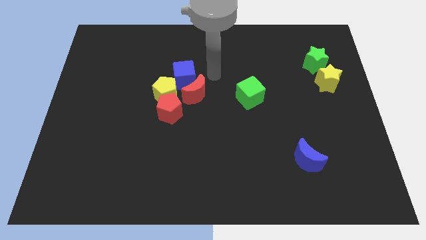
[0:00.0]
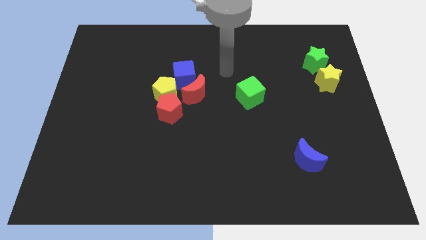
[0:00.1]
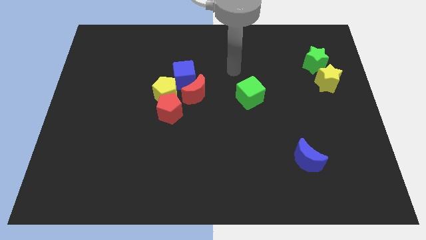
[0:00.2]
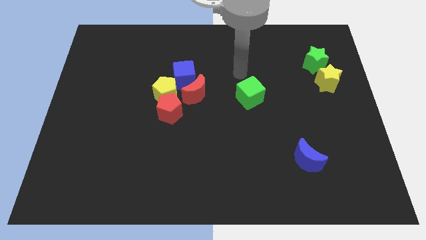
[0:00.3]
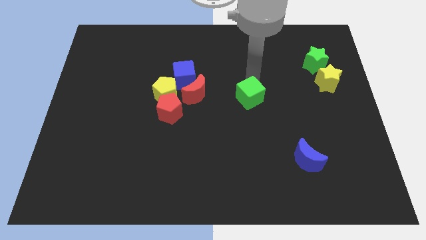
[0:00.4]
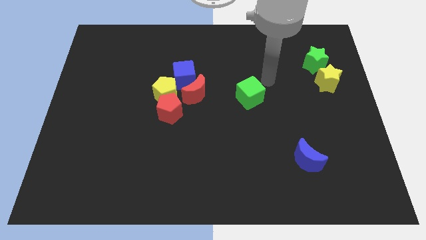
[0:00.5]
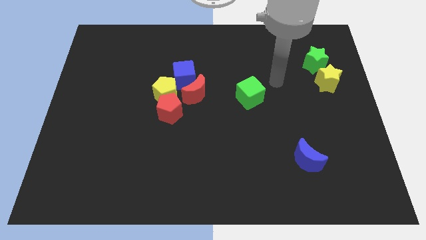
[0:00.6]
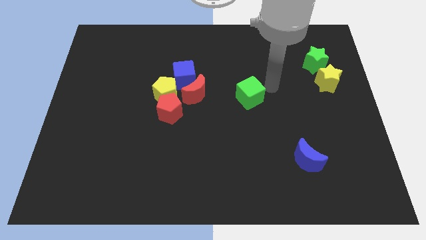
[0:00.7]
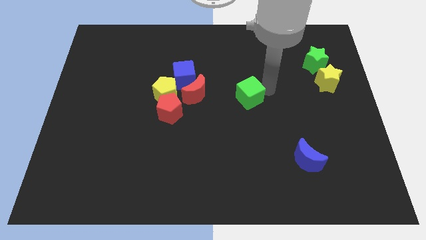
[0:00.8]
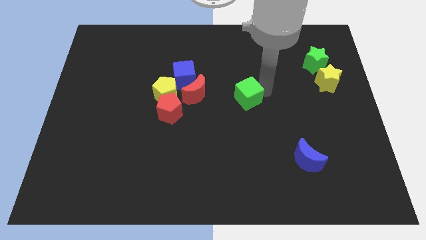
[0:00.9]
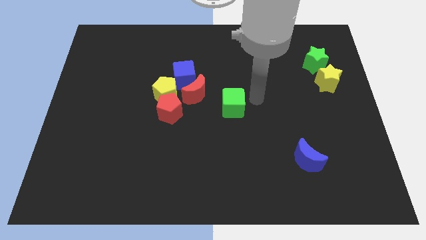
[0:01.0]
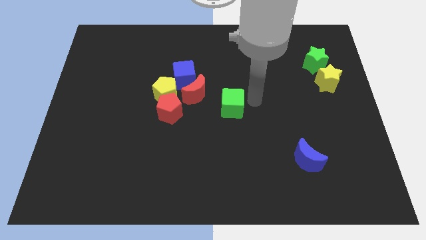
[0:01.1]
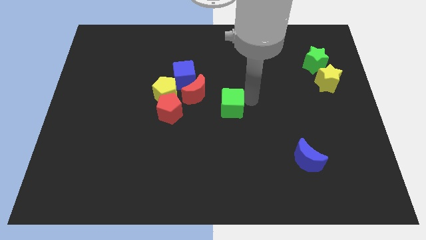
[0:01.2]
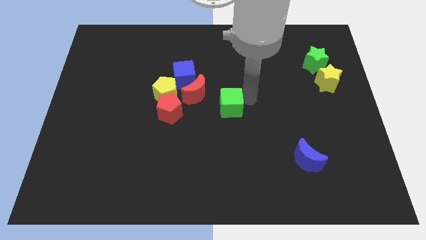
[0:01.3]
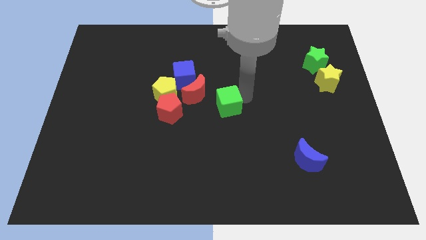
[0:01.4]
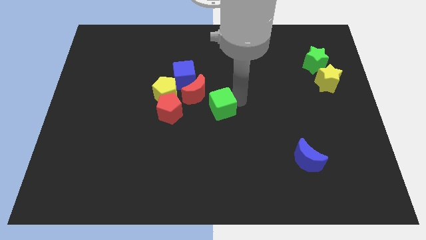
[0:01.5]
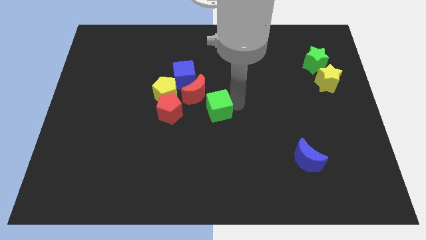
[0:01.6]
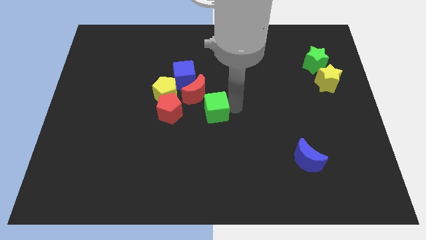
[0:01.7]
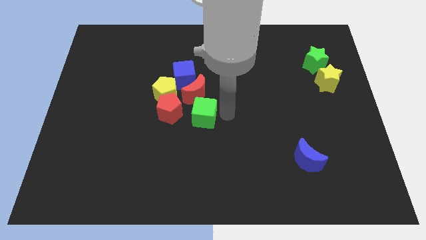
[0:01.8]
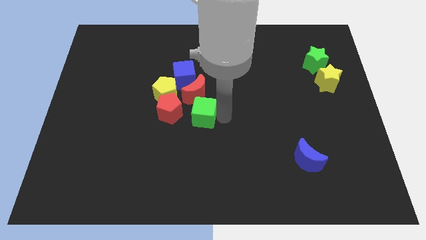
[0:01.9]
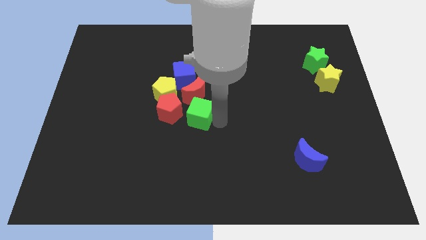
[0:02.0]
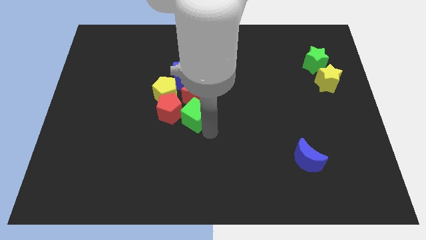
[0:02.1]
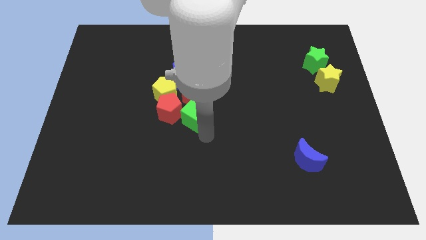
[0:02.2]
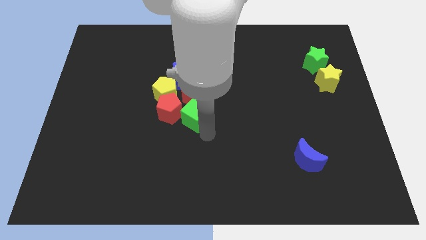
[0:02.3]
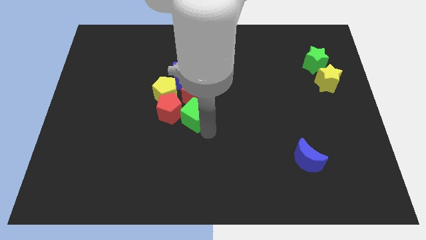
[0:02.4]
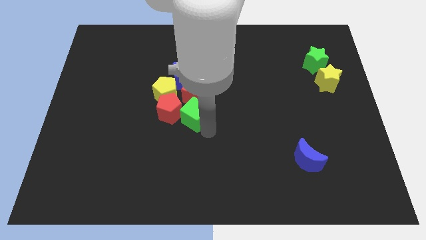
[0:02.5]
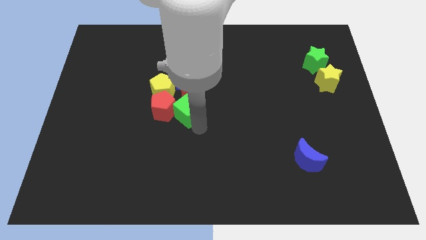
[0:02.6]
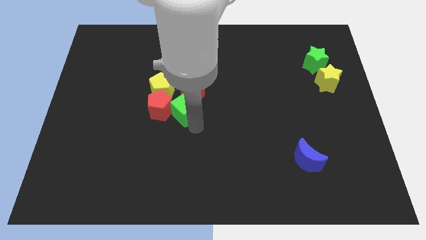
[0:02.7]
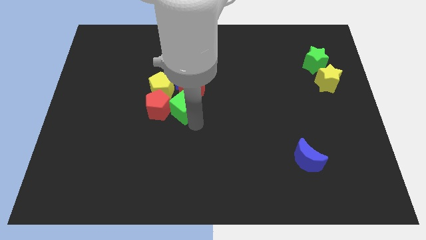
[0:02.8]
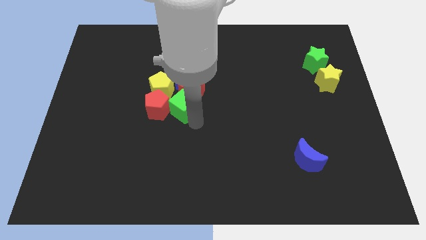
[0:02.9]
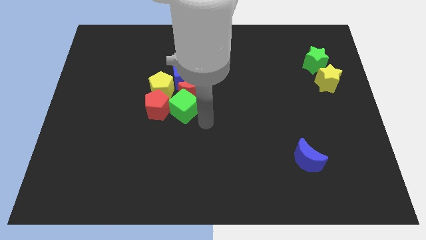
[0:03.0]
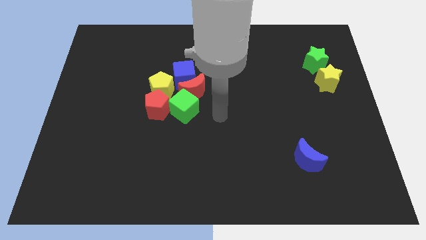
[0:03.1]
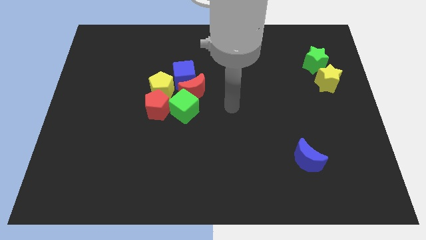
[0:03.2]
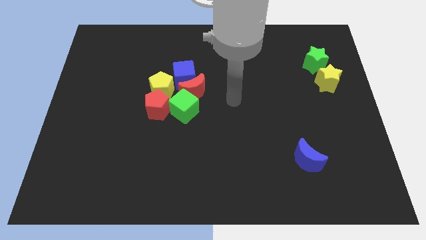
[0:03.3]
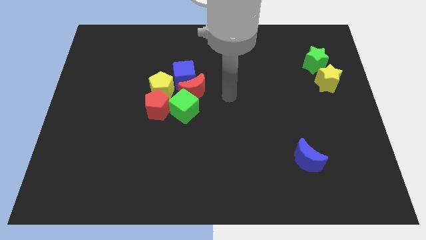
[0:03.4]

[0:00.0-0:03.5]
put the green cube into the red blocks

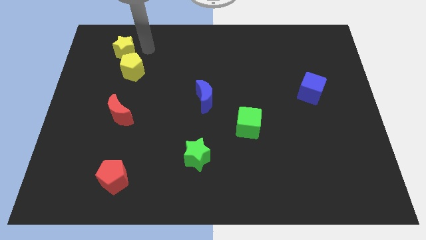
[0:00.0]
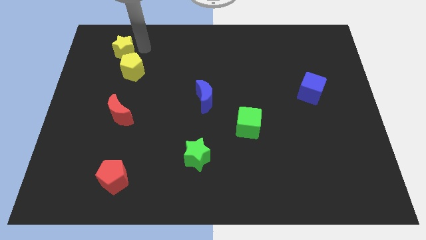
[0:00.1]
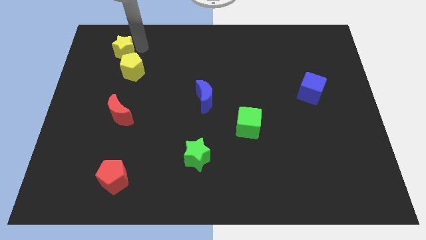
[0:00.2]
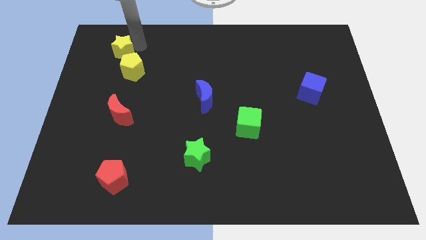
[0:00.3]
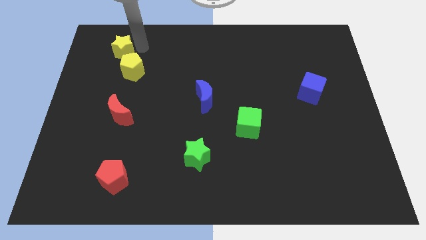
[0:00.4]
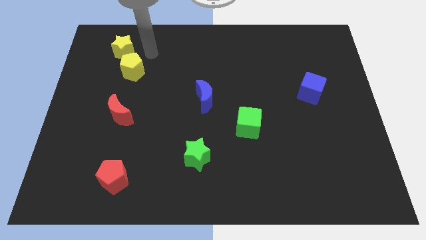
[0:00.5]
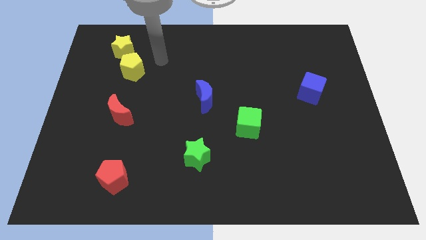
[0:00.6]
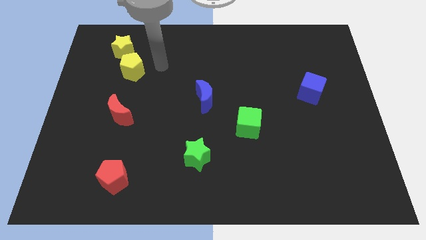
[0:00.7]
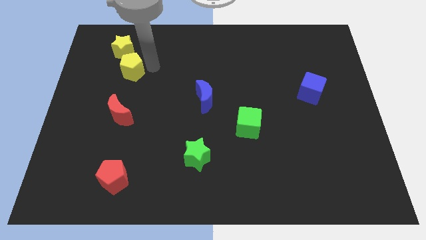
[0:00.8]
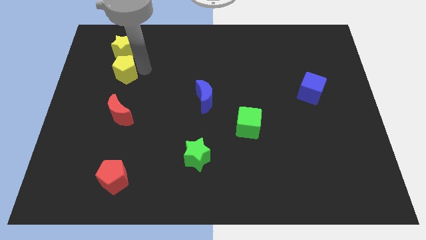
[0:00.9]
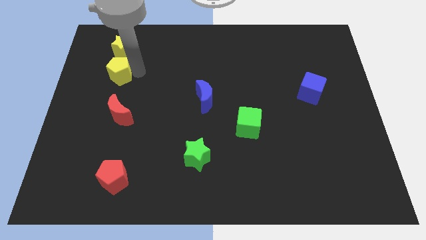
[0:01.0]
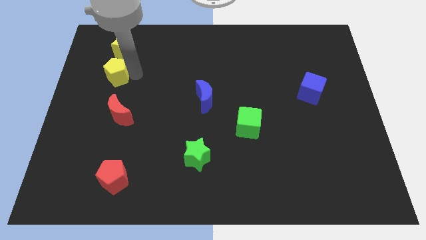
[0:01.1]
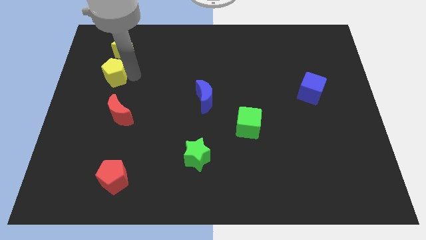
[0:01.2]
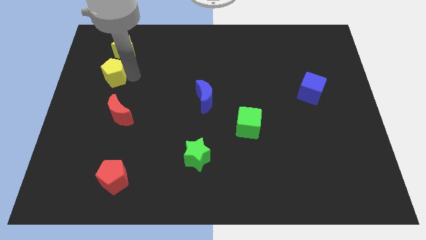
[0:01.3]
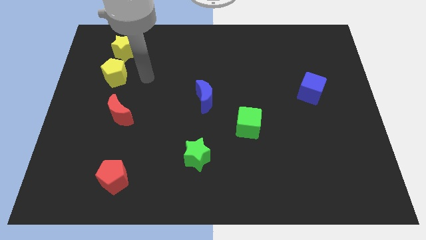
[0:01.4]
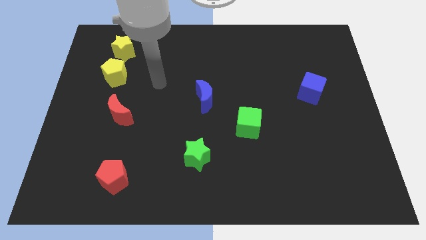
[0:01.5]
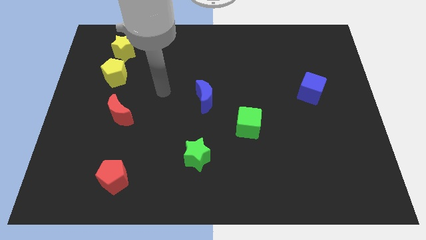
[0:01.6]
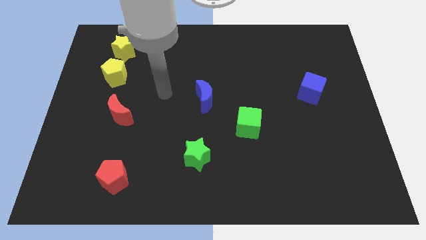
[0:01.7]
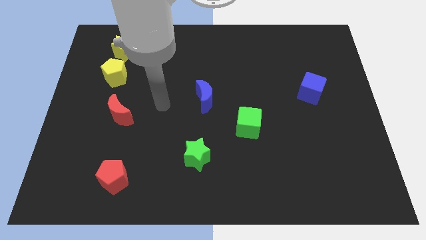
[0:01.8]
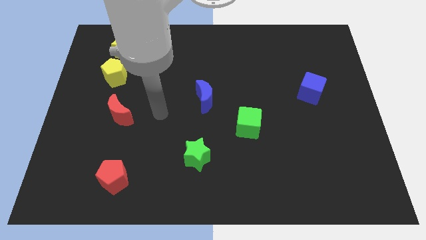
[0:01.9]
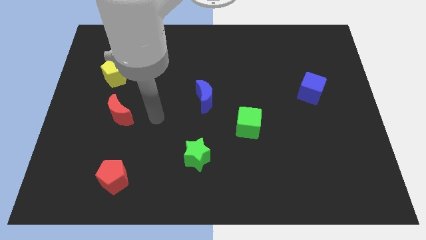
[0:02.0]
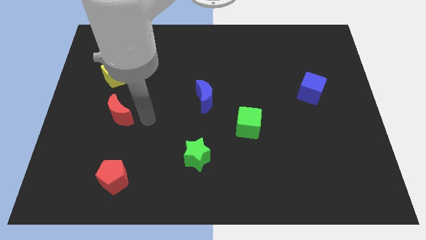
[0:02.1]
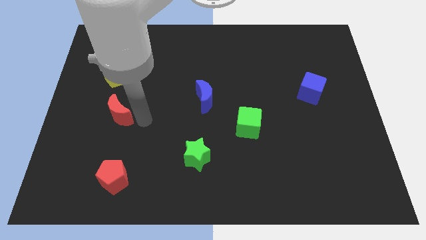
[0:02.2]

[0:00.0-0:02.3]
slightly push the yellow star and yellow pentagon towards the left side

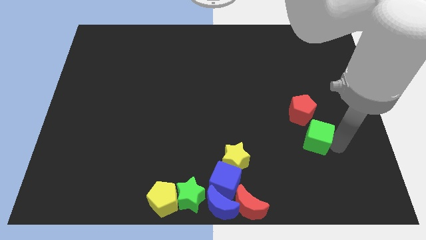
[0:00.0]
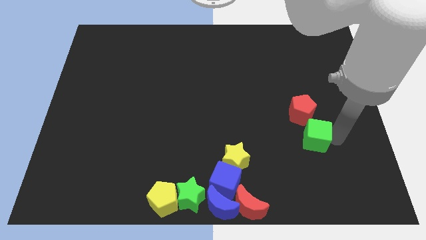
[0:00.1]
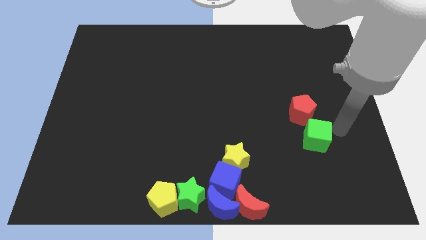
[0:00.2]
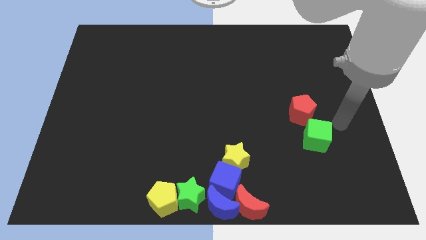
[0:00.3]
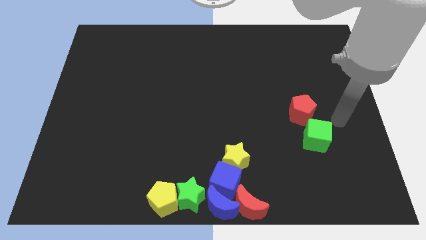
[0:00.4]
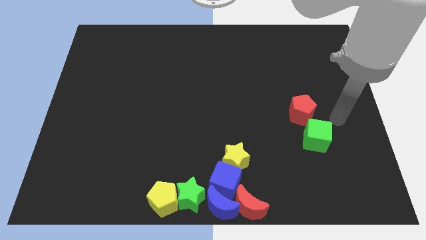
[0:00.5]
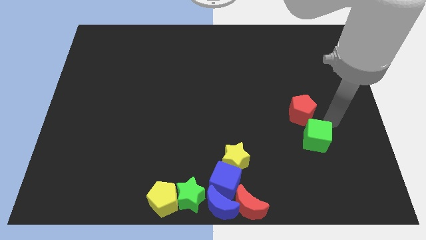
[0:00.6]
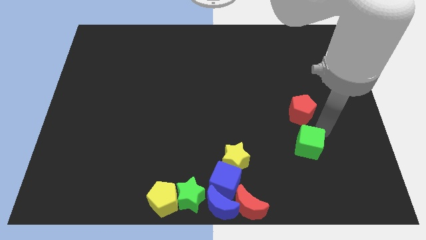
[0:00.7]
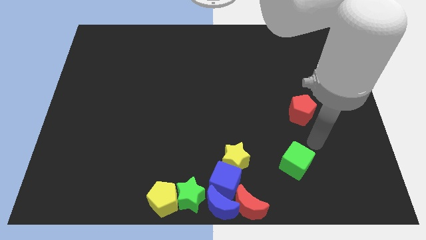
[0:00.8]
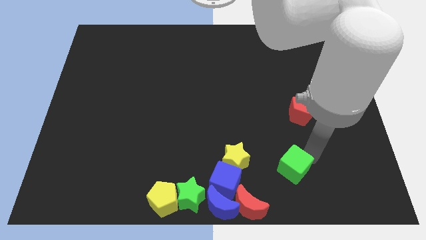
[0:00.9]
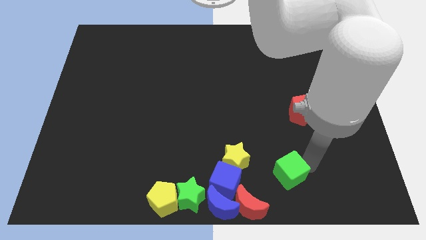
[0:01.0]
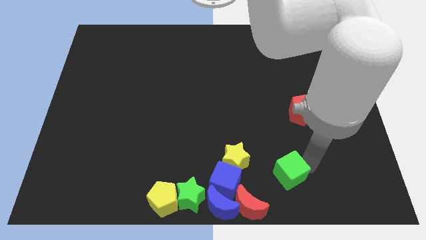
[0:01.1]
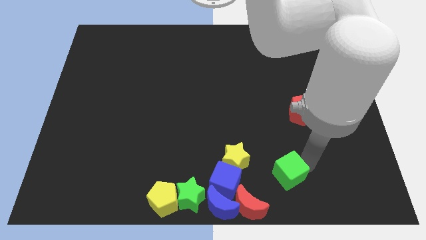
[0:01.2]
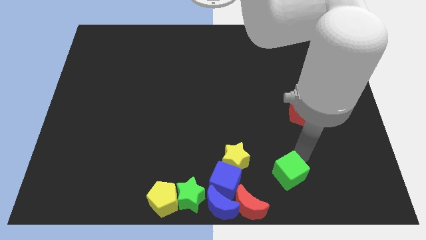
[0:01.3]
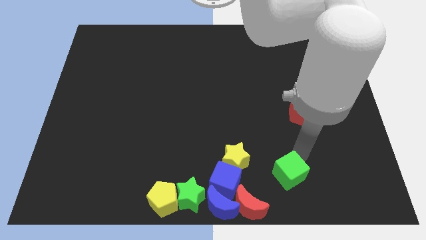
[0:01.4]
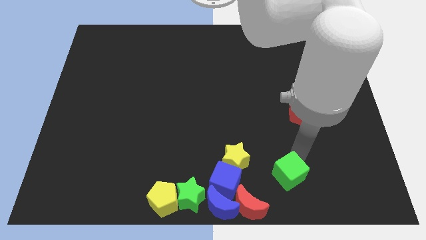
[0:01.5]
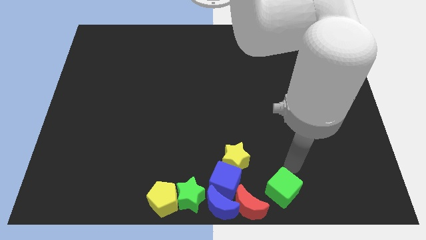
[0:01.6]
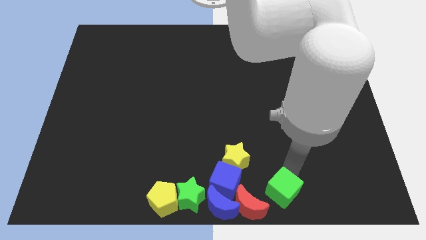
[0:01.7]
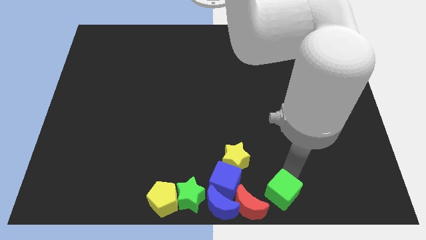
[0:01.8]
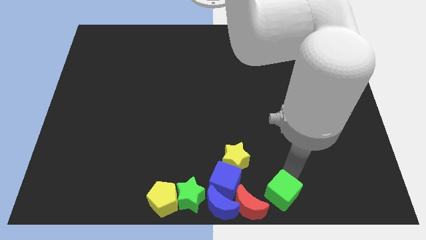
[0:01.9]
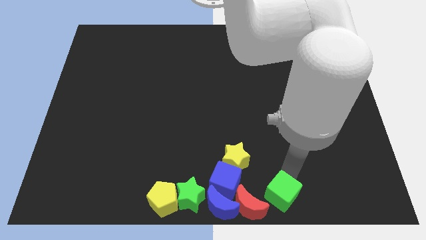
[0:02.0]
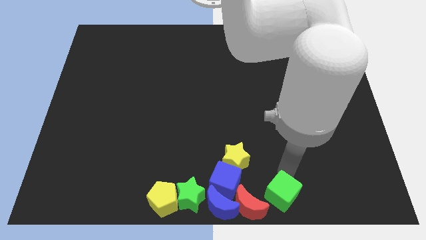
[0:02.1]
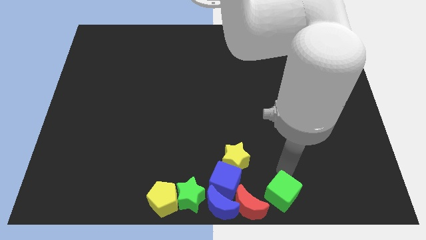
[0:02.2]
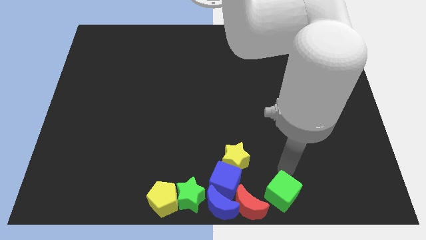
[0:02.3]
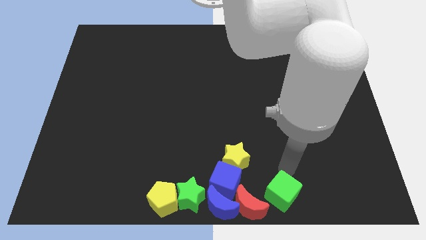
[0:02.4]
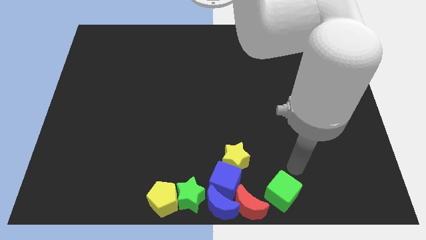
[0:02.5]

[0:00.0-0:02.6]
place the green cube diagonal right of red moon

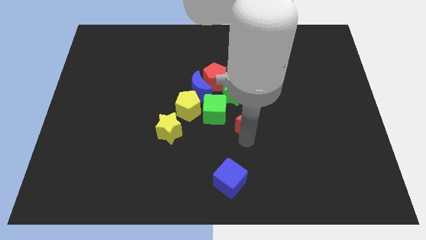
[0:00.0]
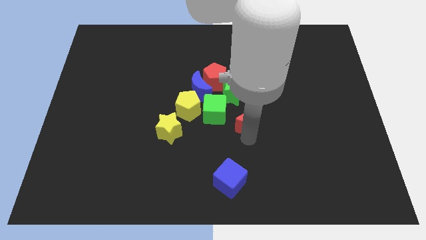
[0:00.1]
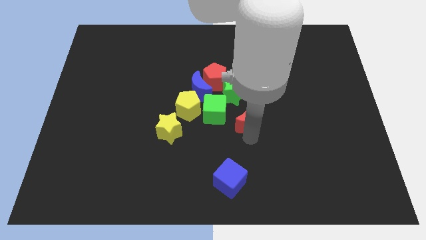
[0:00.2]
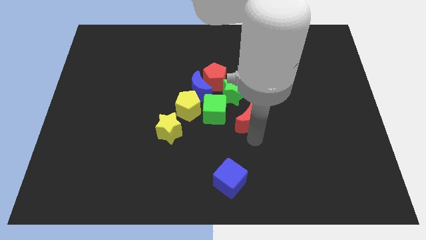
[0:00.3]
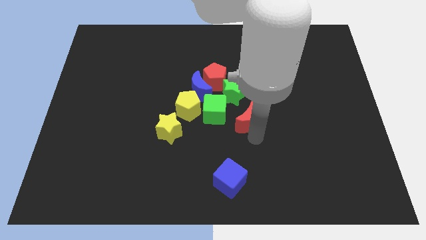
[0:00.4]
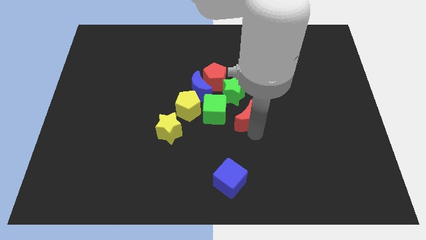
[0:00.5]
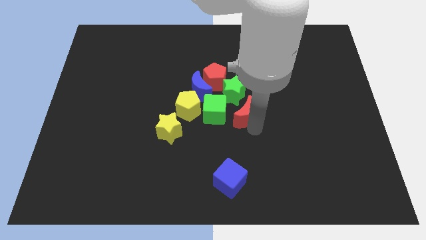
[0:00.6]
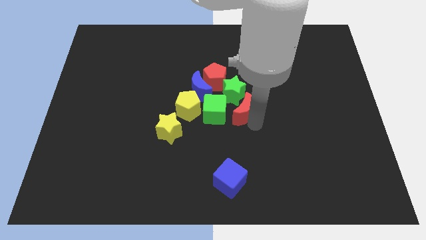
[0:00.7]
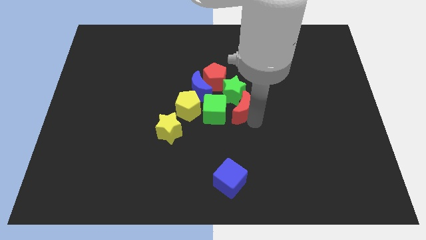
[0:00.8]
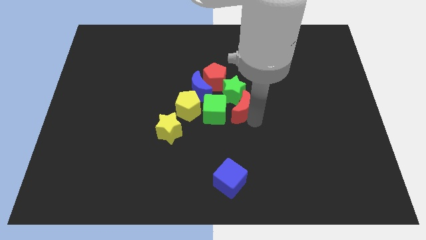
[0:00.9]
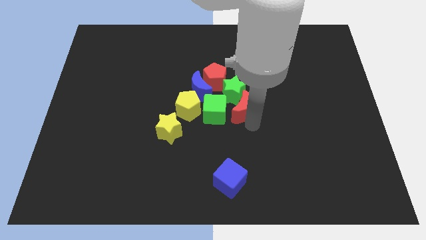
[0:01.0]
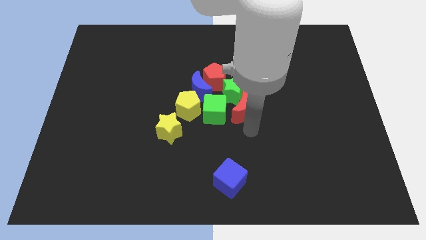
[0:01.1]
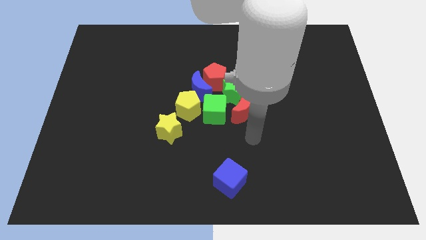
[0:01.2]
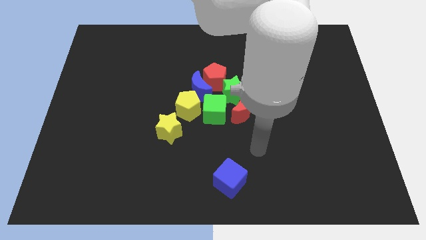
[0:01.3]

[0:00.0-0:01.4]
push the red moon to the right side of the green cube
